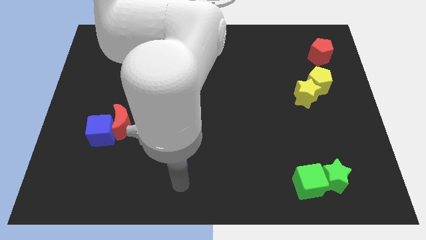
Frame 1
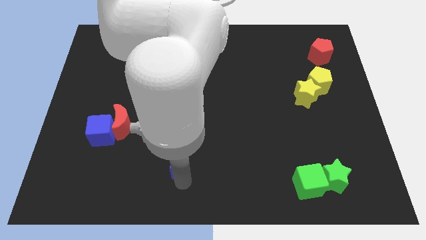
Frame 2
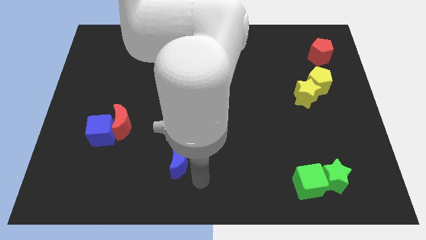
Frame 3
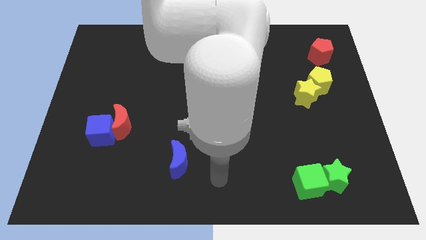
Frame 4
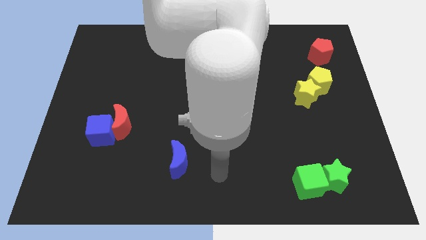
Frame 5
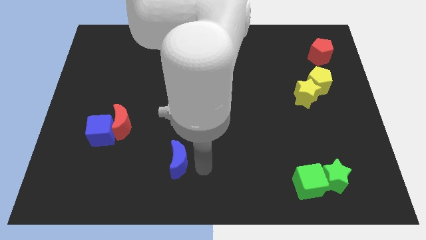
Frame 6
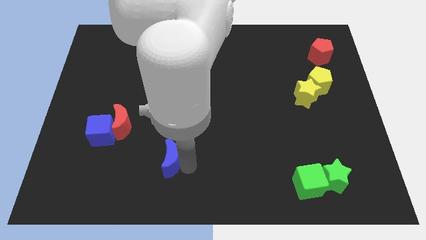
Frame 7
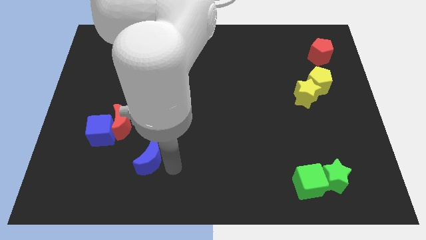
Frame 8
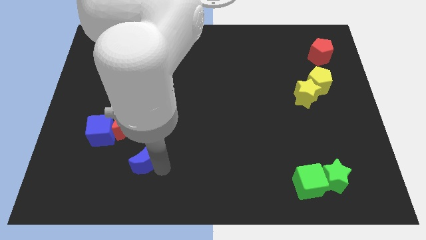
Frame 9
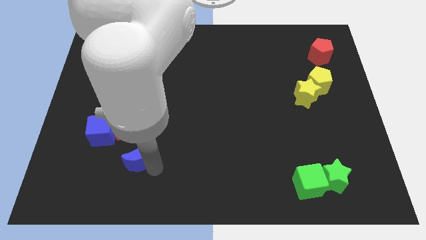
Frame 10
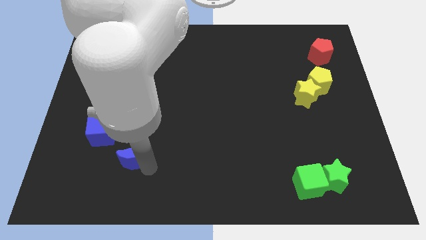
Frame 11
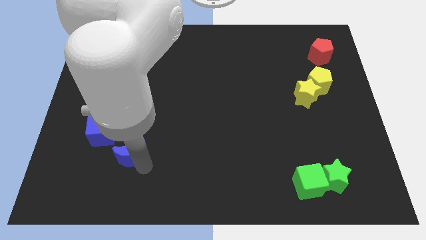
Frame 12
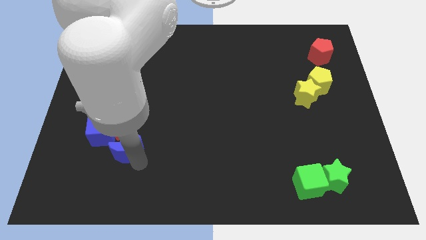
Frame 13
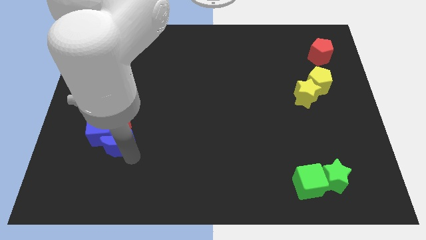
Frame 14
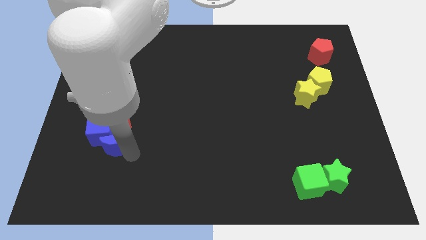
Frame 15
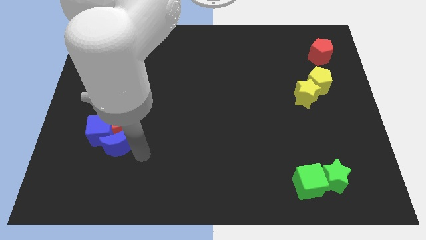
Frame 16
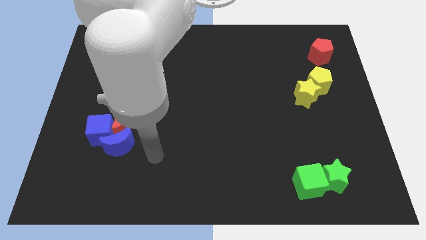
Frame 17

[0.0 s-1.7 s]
drag the blue moon into the blue cube

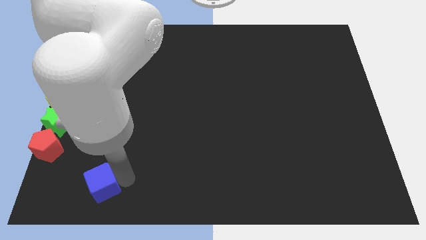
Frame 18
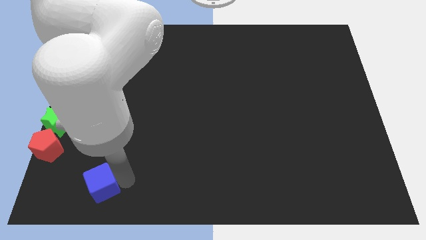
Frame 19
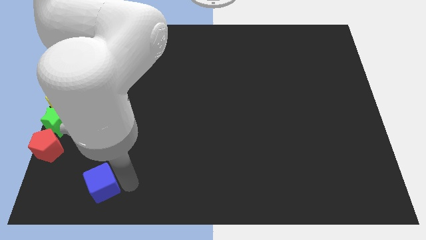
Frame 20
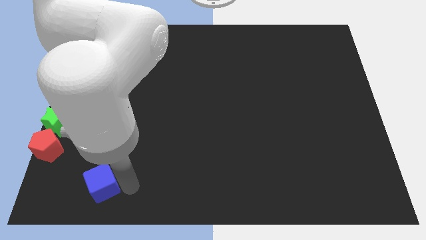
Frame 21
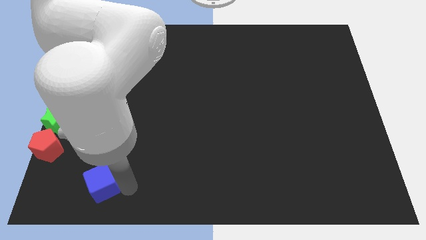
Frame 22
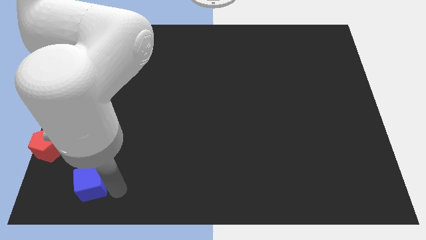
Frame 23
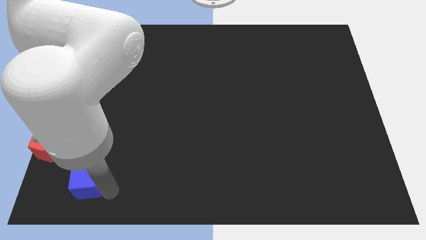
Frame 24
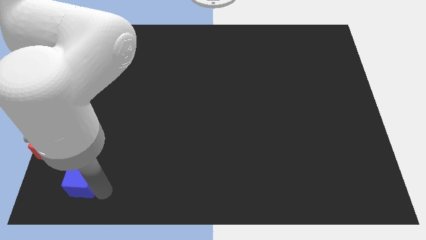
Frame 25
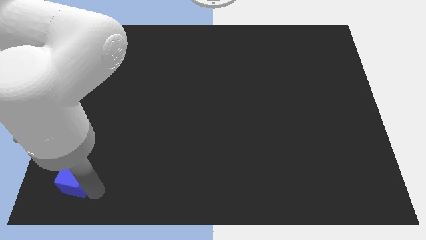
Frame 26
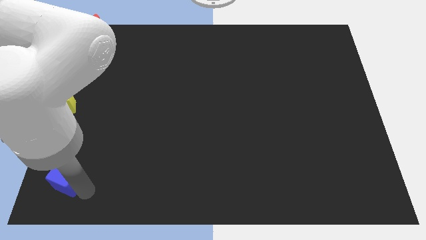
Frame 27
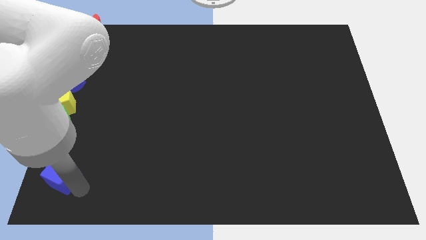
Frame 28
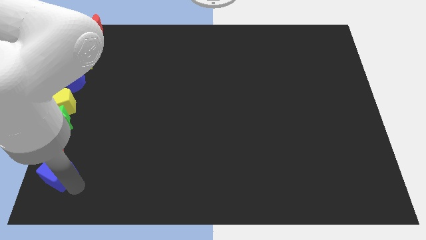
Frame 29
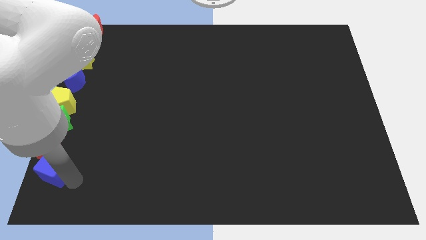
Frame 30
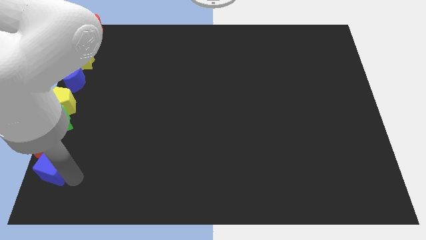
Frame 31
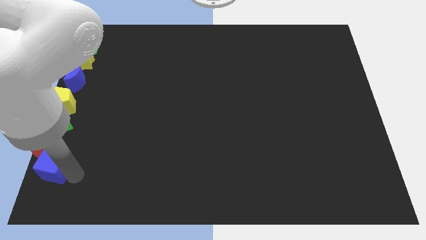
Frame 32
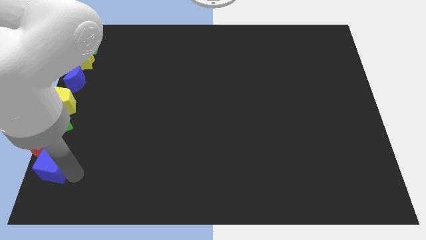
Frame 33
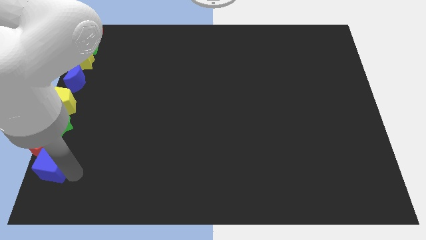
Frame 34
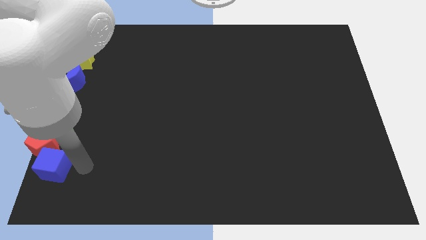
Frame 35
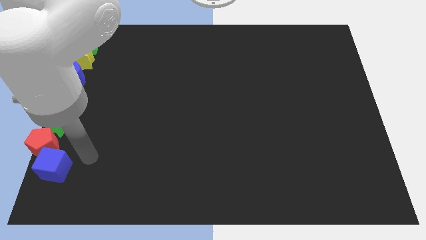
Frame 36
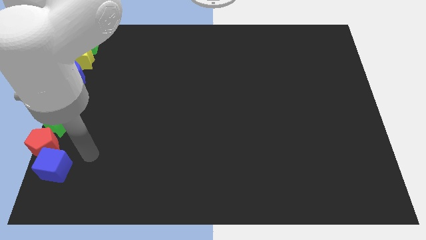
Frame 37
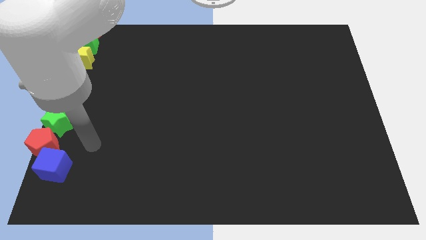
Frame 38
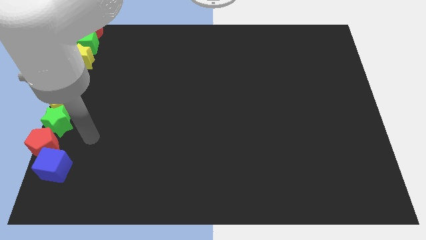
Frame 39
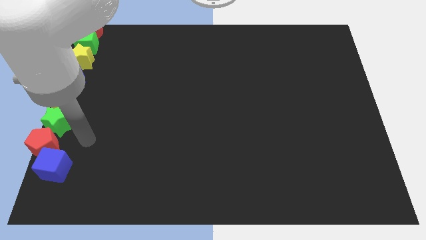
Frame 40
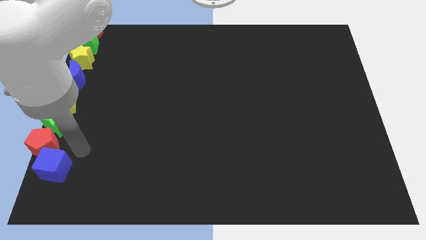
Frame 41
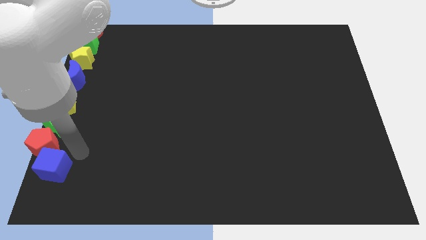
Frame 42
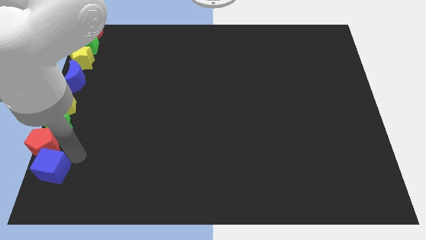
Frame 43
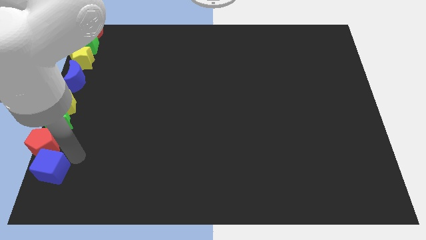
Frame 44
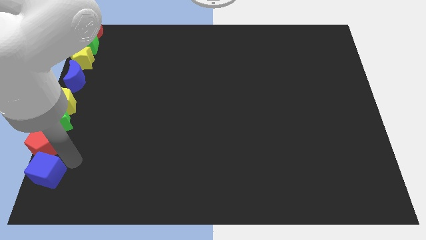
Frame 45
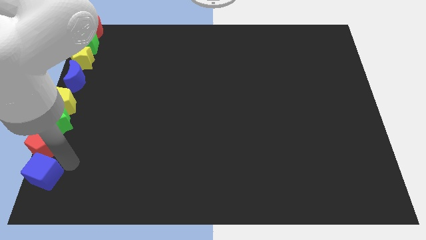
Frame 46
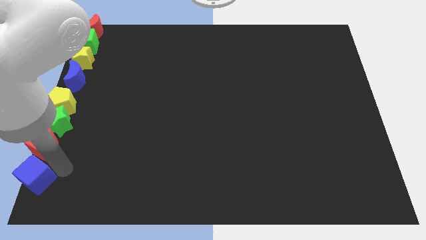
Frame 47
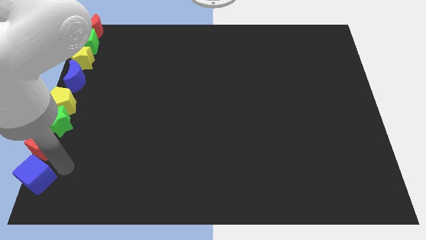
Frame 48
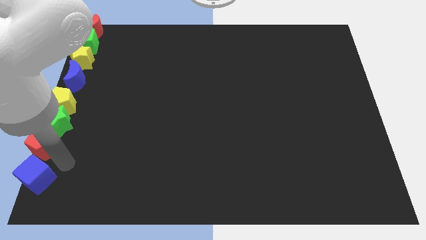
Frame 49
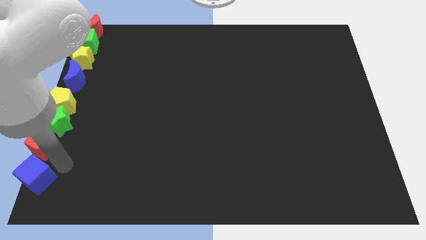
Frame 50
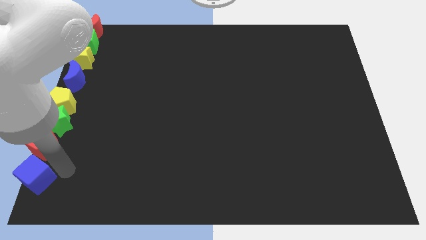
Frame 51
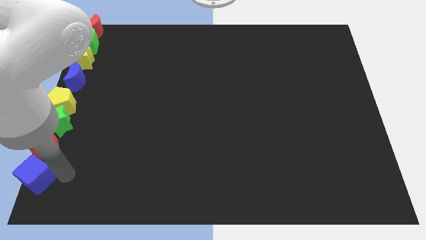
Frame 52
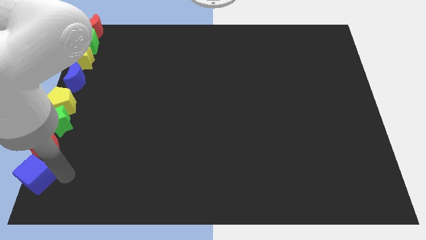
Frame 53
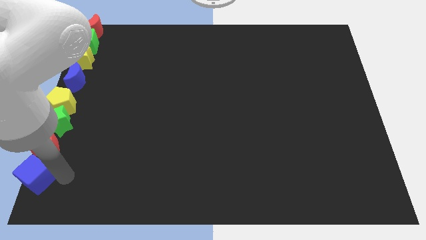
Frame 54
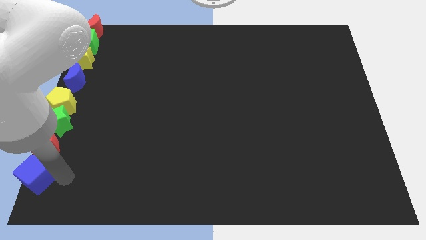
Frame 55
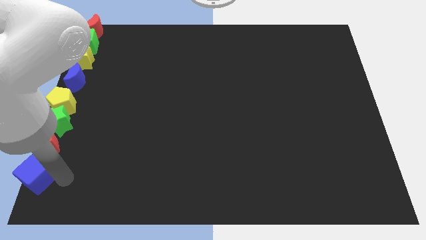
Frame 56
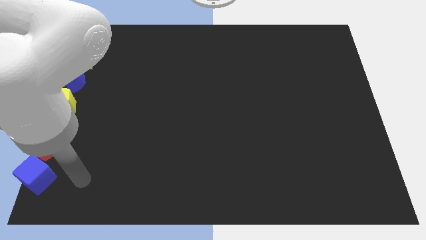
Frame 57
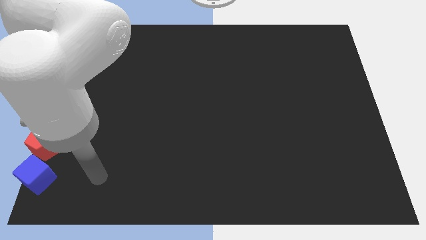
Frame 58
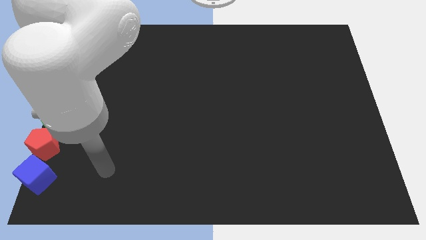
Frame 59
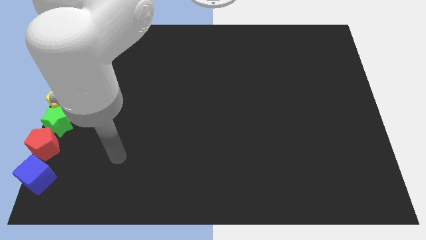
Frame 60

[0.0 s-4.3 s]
move the blue cube to the bottom of the red pentagon

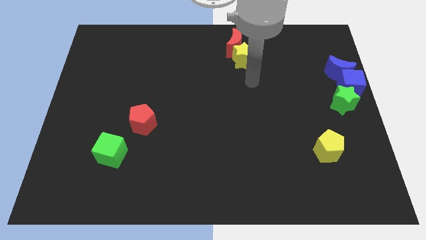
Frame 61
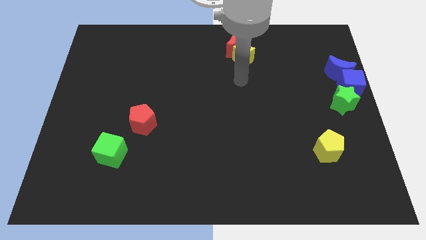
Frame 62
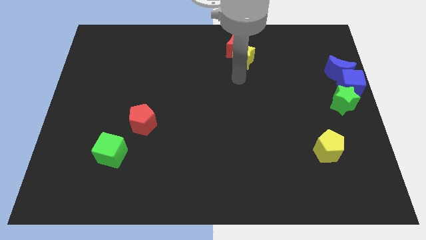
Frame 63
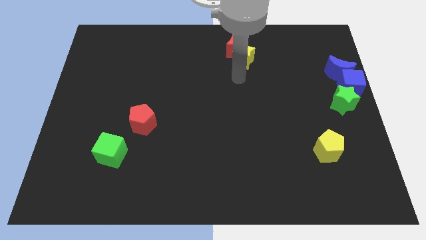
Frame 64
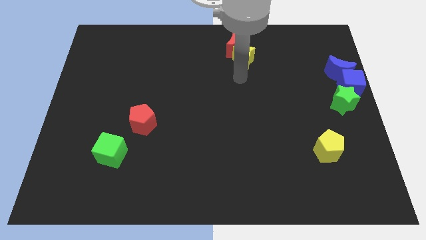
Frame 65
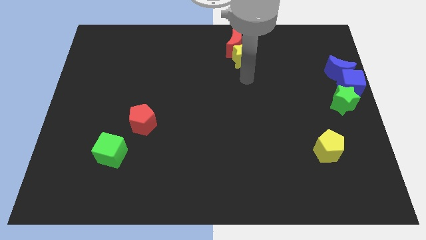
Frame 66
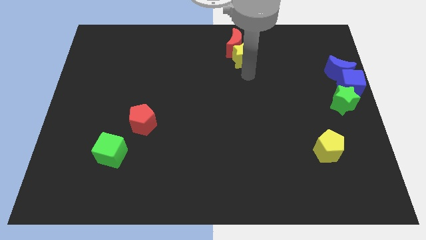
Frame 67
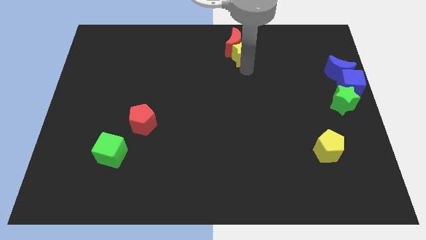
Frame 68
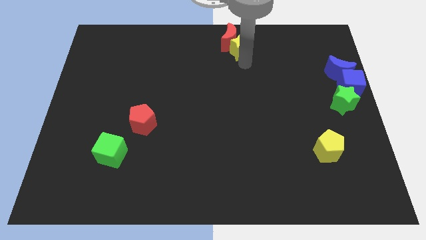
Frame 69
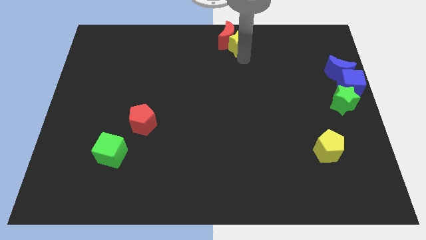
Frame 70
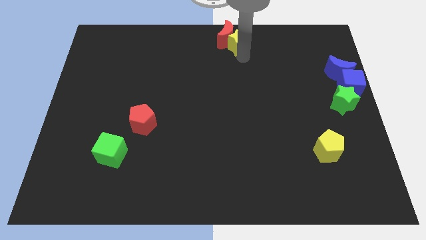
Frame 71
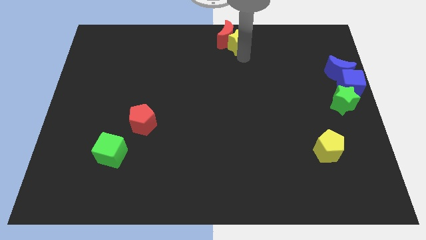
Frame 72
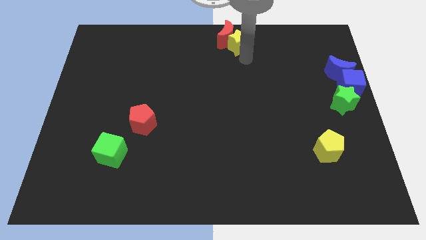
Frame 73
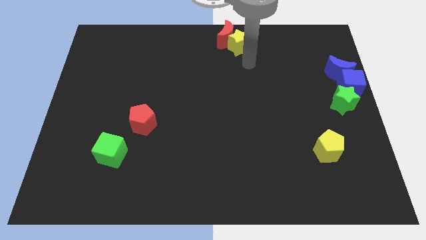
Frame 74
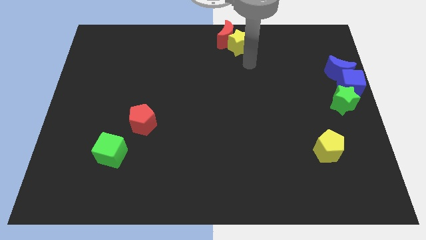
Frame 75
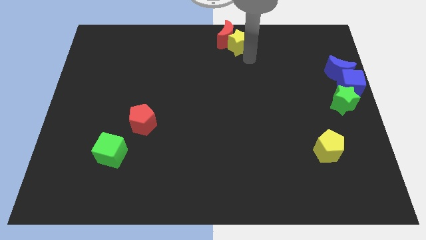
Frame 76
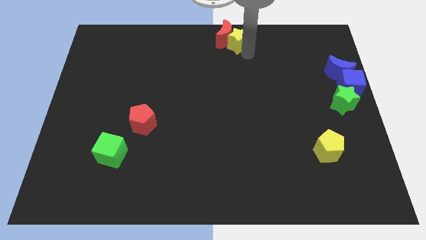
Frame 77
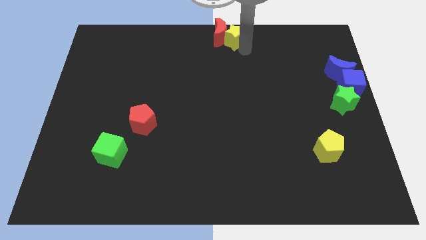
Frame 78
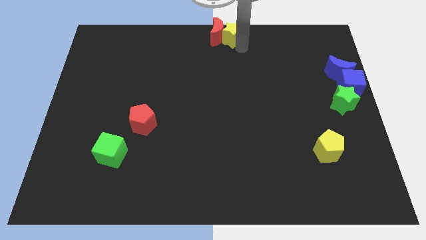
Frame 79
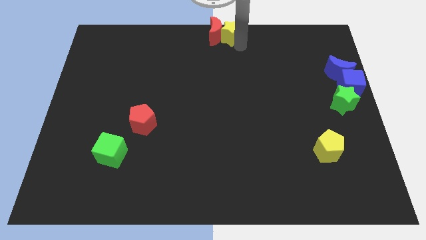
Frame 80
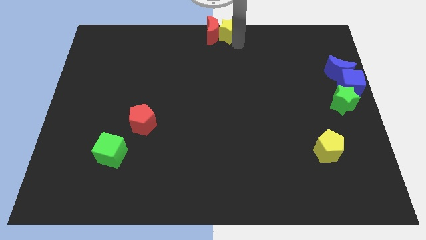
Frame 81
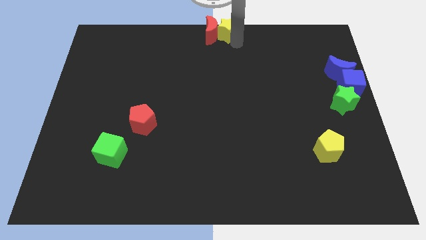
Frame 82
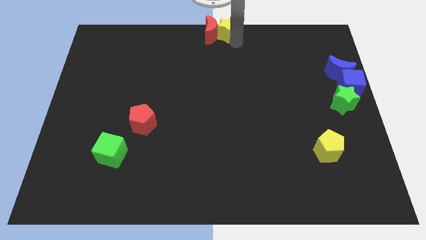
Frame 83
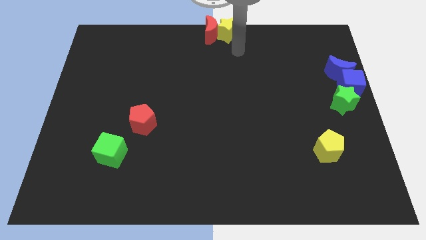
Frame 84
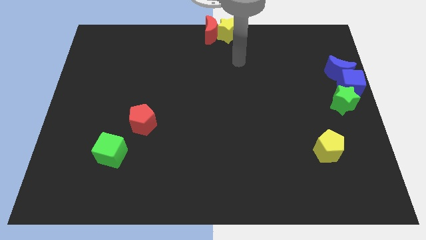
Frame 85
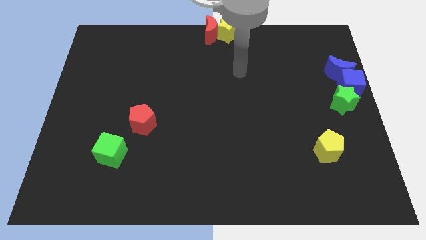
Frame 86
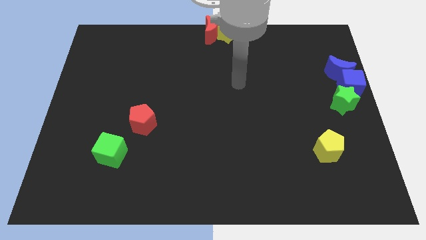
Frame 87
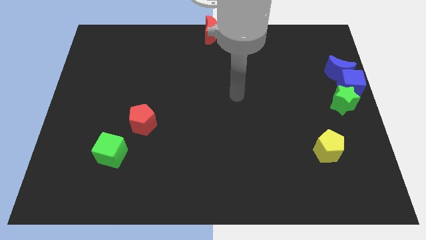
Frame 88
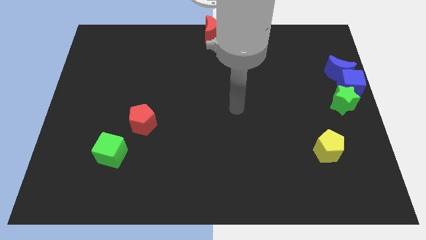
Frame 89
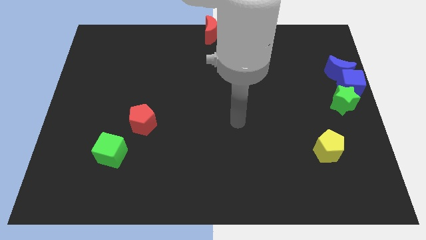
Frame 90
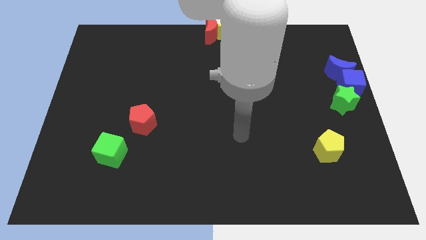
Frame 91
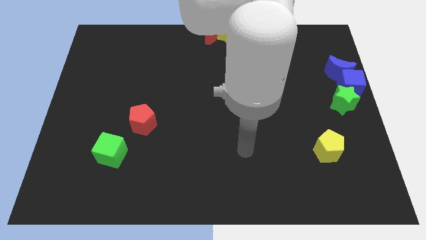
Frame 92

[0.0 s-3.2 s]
move the red crescent and yellow star to the top center of the board
